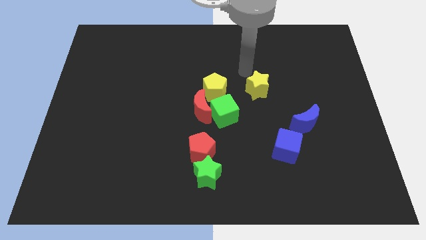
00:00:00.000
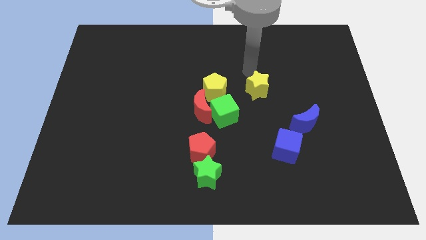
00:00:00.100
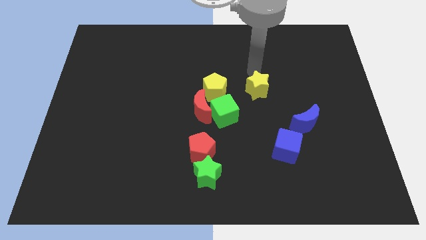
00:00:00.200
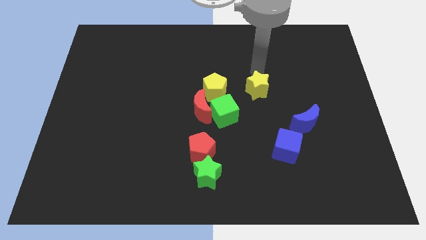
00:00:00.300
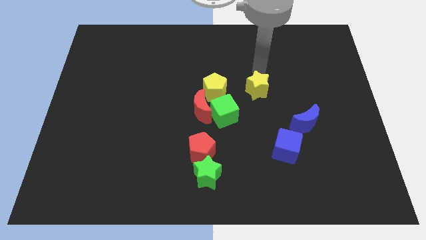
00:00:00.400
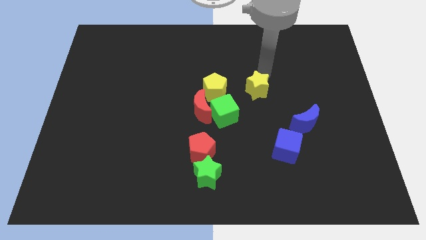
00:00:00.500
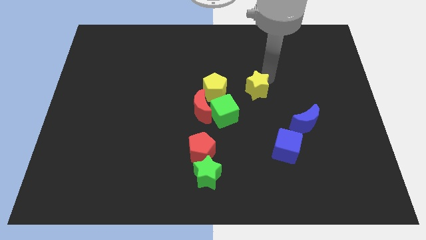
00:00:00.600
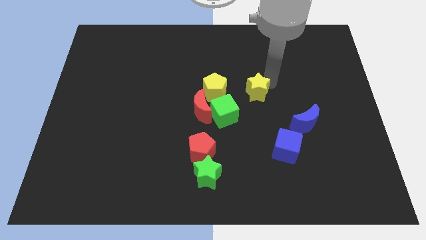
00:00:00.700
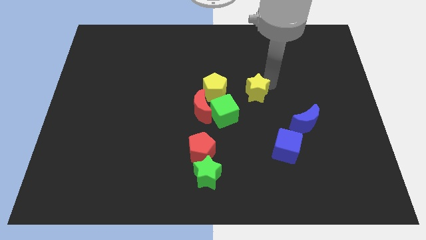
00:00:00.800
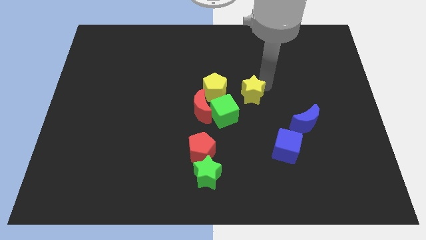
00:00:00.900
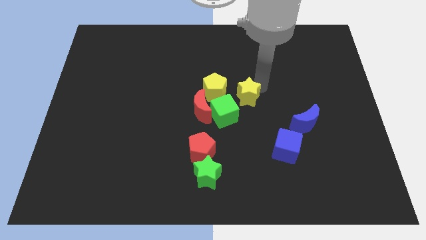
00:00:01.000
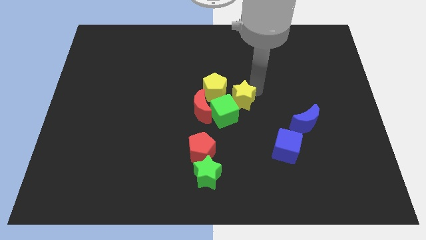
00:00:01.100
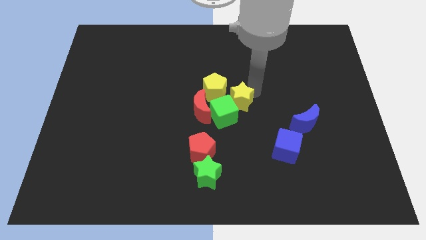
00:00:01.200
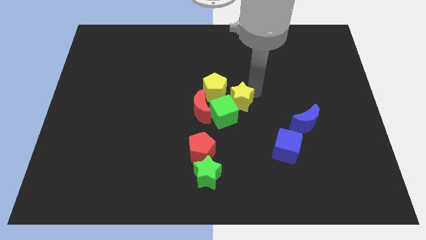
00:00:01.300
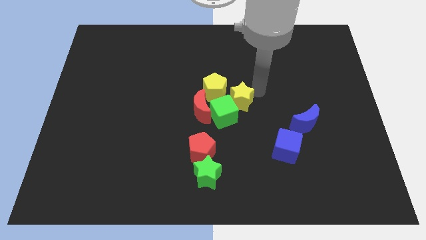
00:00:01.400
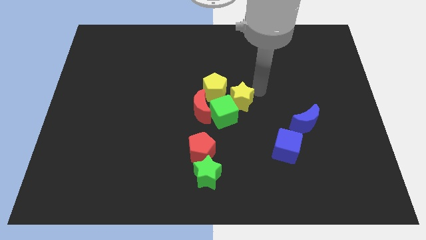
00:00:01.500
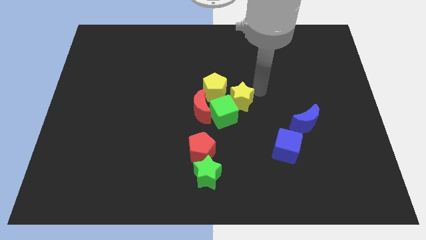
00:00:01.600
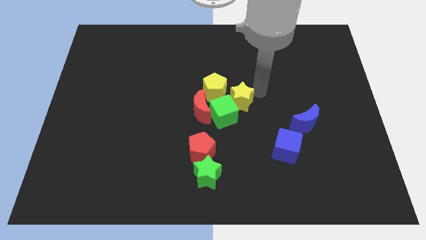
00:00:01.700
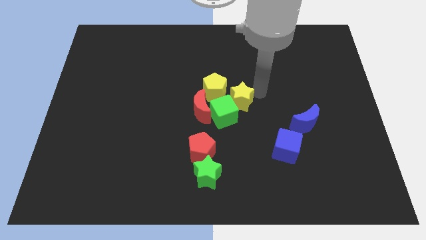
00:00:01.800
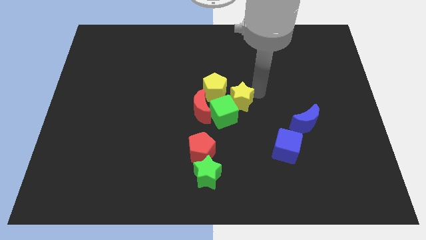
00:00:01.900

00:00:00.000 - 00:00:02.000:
slide the yellow star at the top right of the green cube

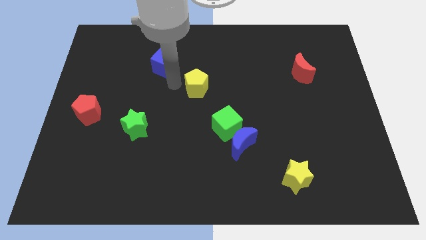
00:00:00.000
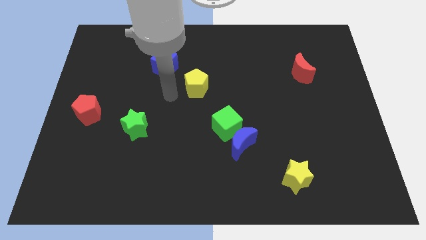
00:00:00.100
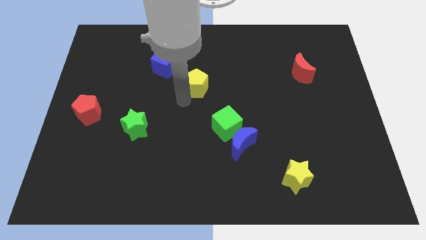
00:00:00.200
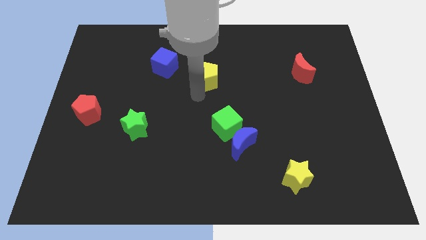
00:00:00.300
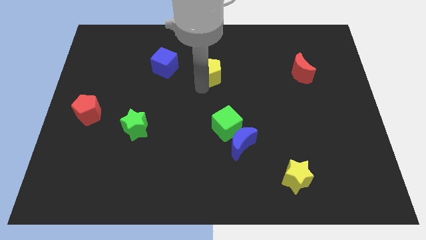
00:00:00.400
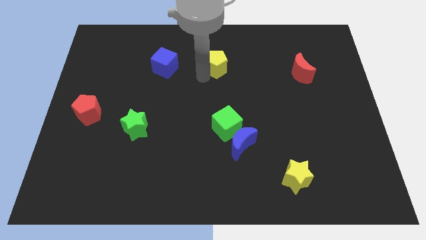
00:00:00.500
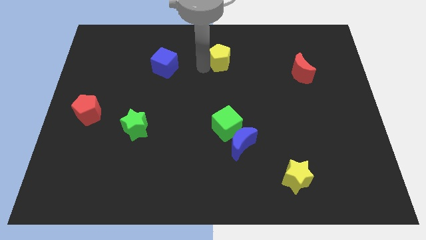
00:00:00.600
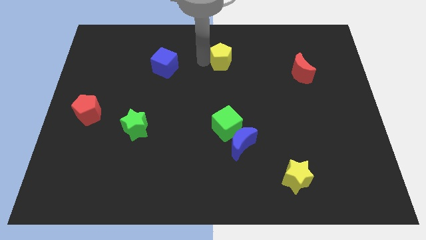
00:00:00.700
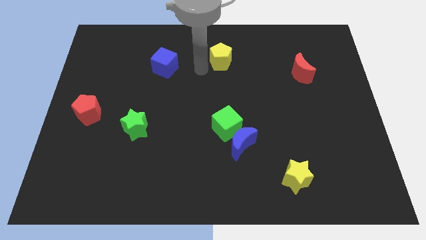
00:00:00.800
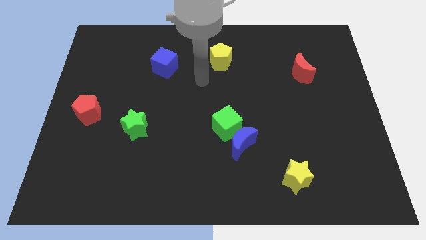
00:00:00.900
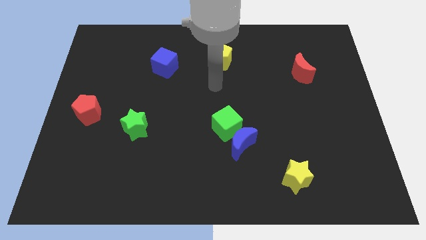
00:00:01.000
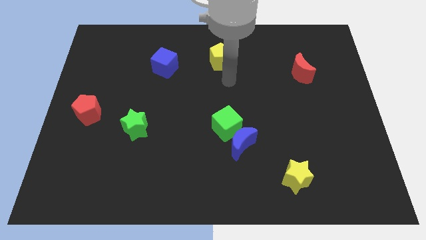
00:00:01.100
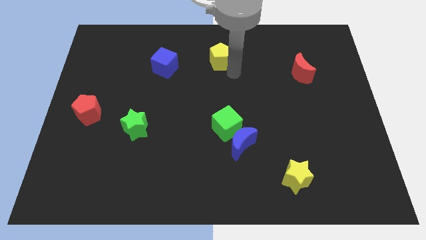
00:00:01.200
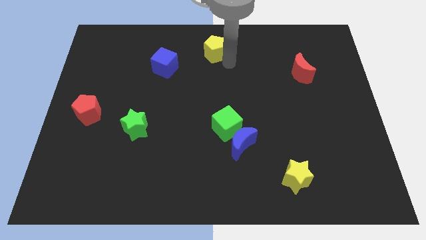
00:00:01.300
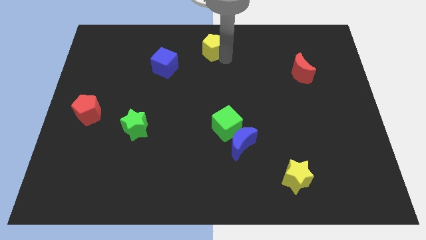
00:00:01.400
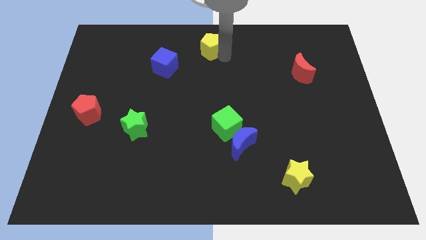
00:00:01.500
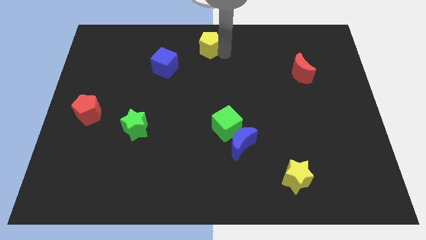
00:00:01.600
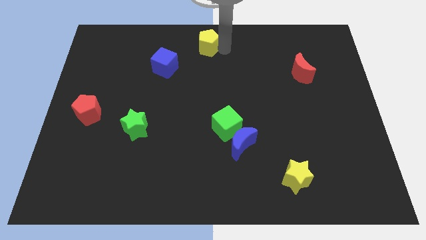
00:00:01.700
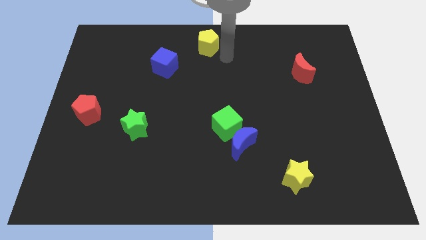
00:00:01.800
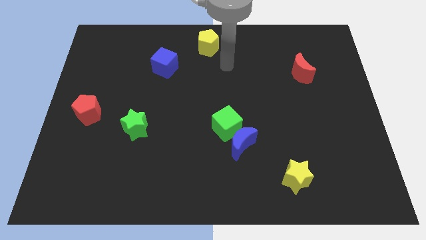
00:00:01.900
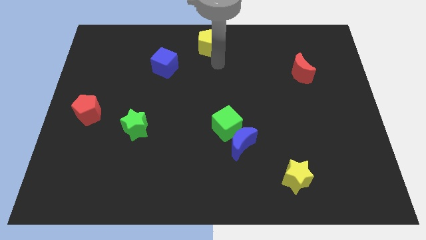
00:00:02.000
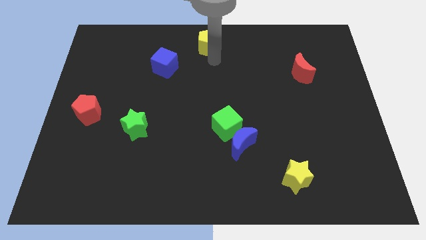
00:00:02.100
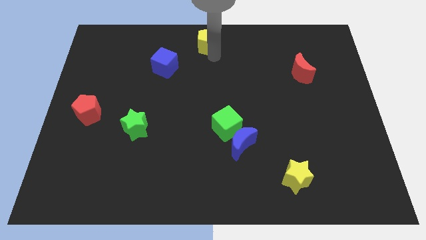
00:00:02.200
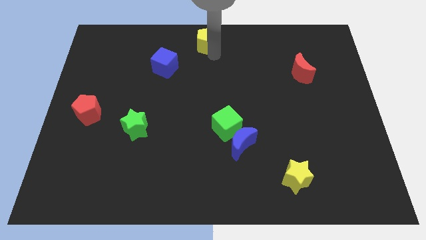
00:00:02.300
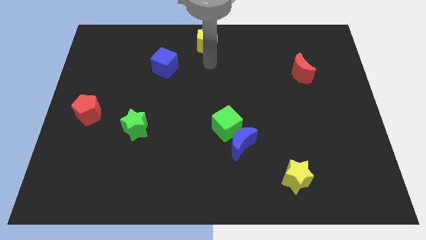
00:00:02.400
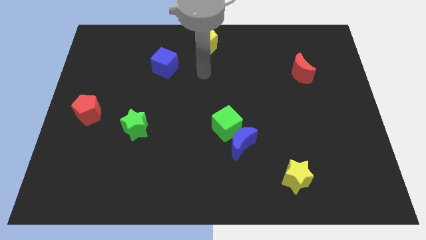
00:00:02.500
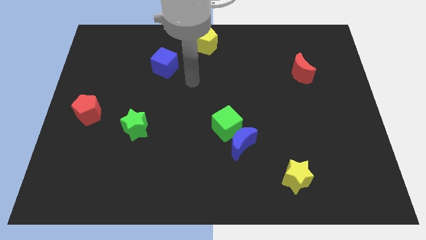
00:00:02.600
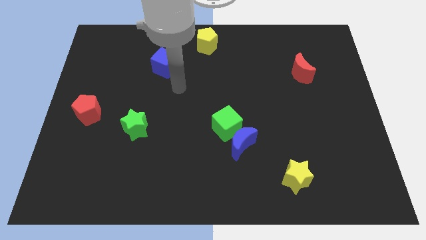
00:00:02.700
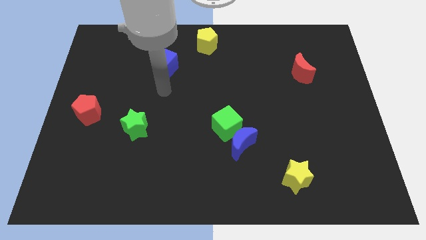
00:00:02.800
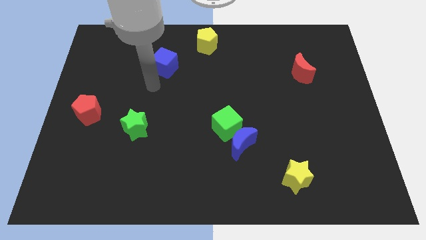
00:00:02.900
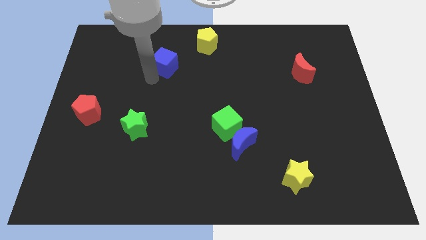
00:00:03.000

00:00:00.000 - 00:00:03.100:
put the yellow pentagon to the top center of the board

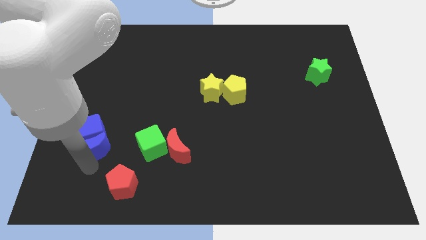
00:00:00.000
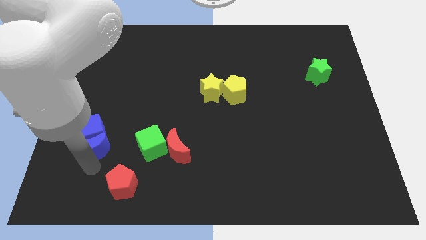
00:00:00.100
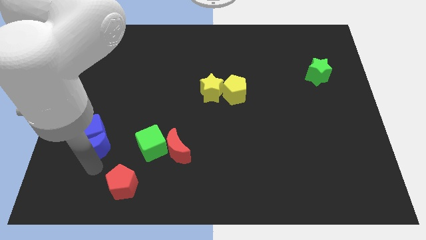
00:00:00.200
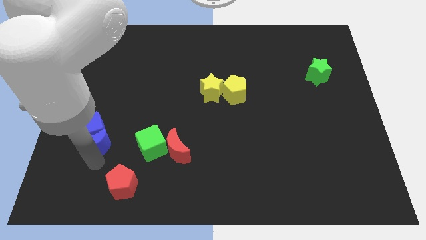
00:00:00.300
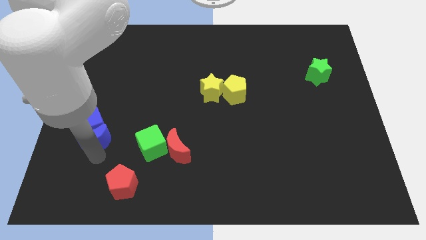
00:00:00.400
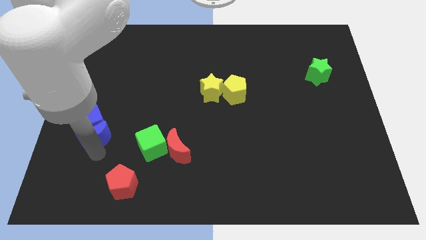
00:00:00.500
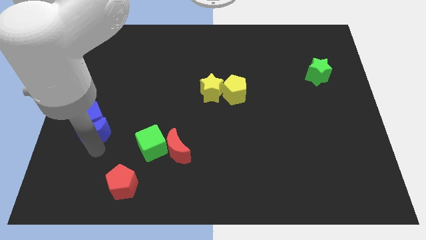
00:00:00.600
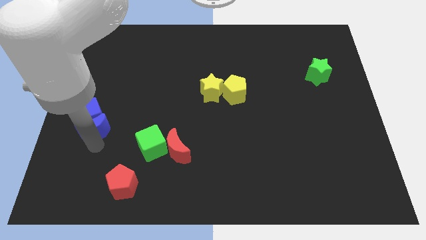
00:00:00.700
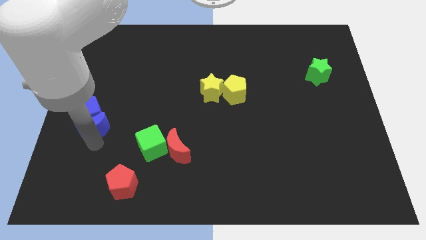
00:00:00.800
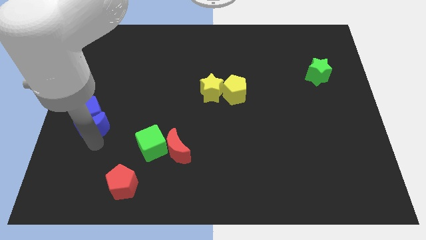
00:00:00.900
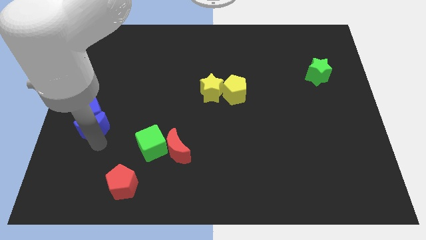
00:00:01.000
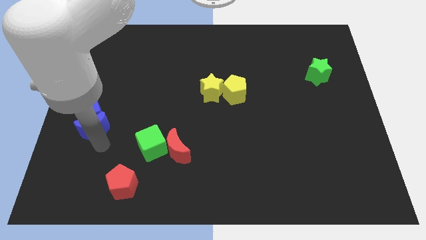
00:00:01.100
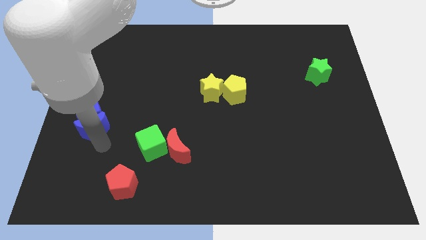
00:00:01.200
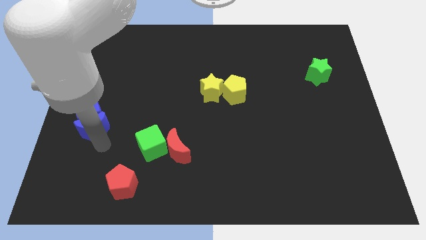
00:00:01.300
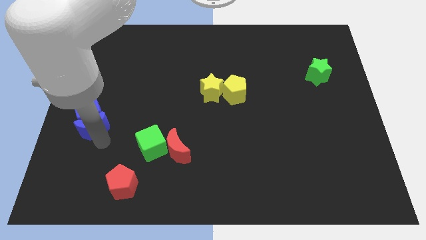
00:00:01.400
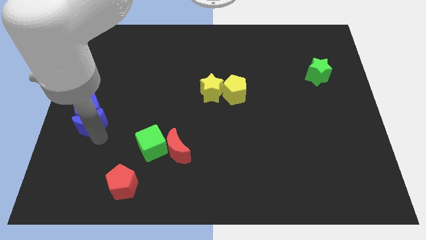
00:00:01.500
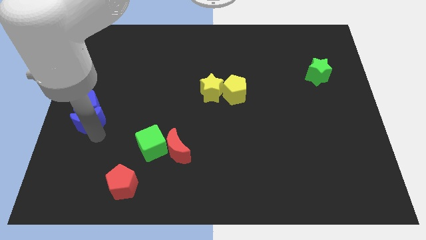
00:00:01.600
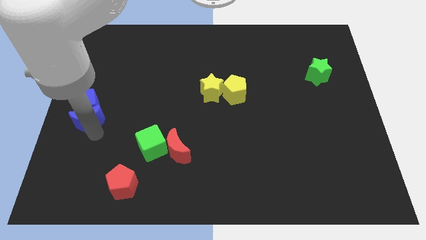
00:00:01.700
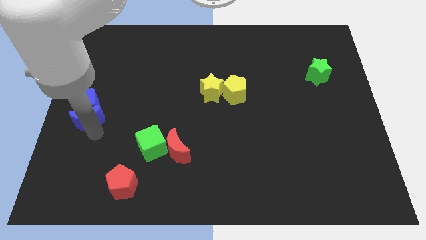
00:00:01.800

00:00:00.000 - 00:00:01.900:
push the blue cube with blue crescent towards the left center of the board

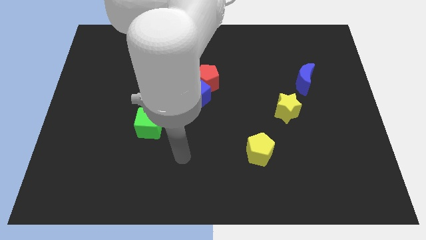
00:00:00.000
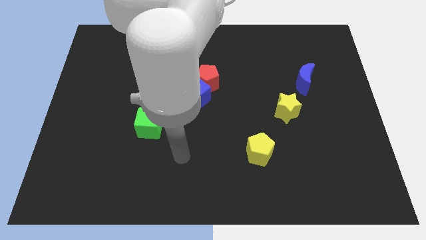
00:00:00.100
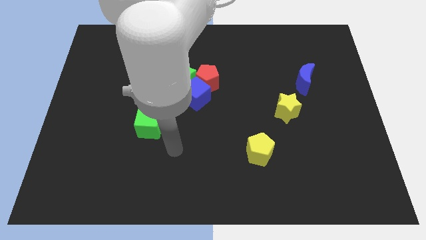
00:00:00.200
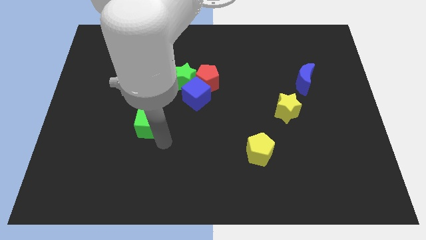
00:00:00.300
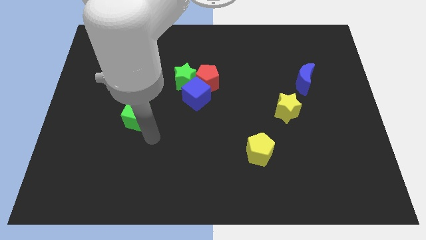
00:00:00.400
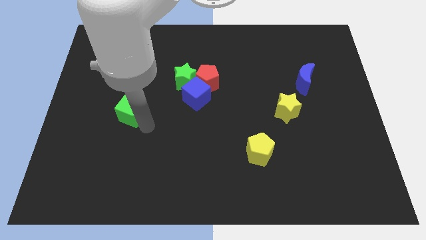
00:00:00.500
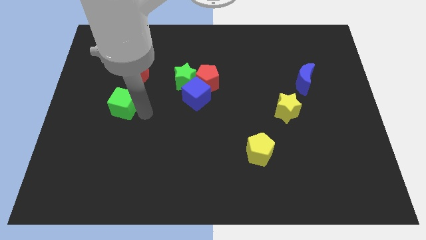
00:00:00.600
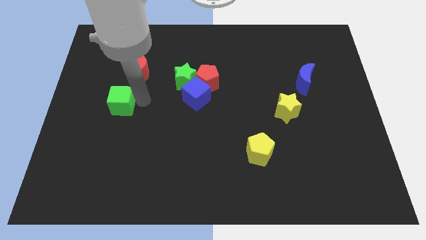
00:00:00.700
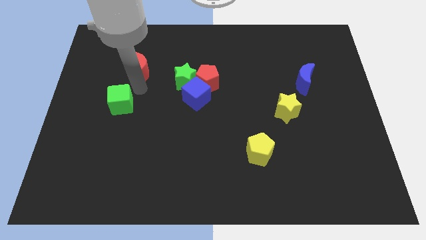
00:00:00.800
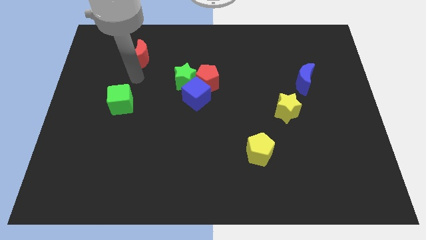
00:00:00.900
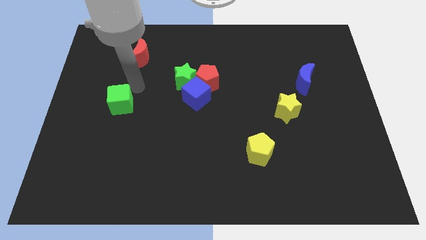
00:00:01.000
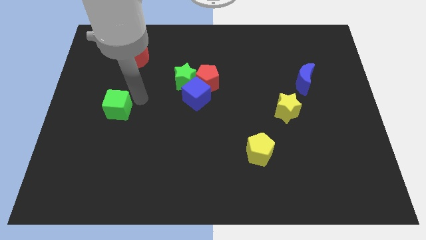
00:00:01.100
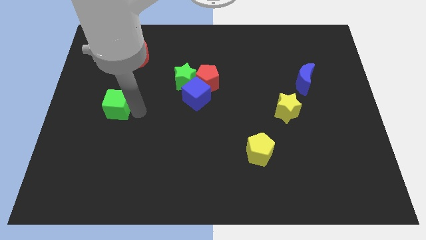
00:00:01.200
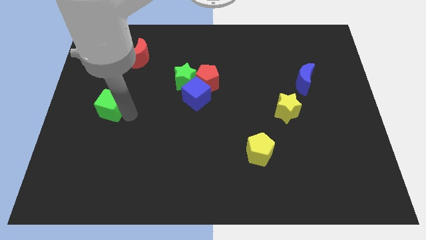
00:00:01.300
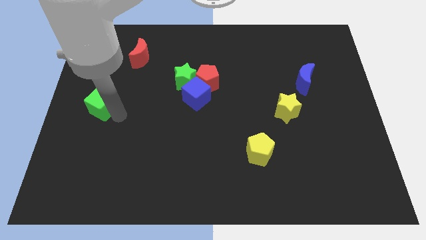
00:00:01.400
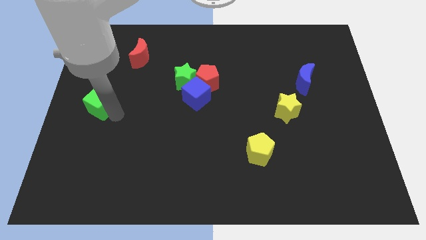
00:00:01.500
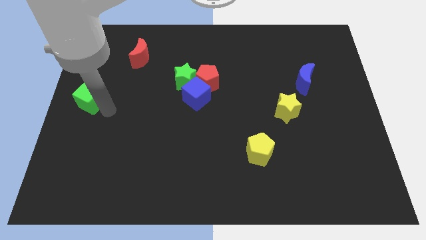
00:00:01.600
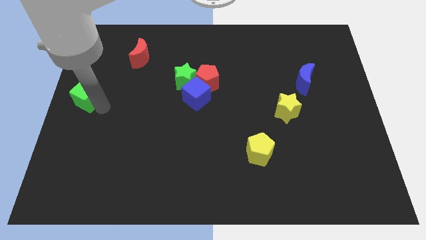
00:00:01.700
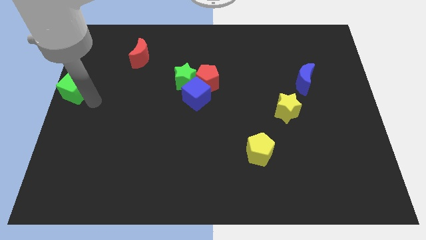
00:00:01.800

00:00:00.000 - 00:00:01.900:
push the green cube to the center left side of the board
